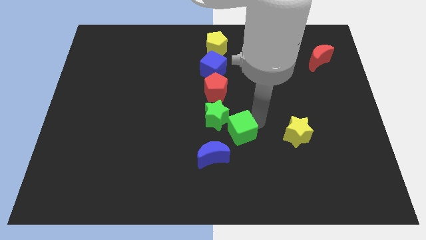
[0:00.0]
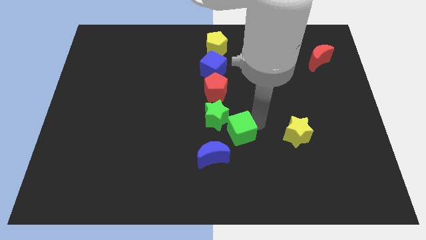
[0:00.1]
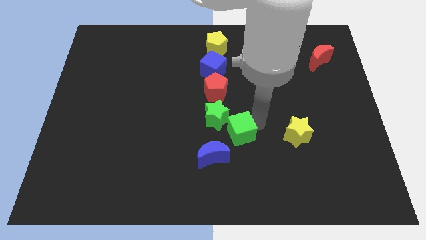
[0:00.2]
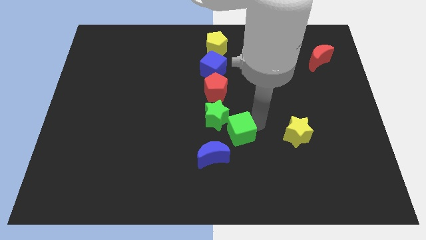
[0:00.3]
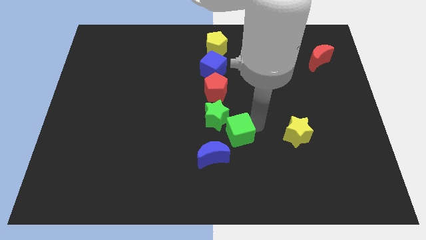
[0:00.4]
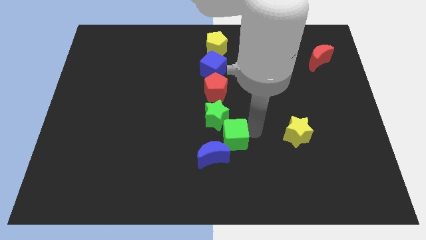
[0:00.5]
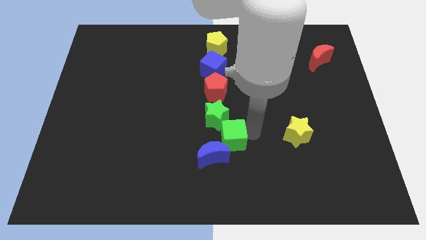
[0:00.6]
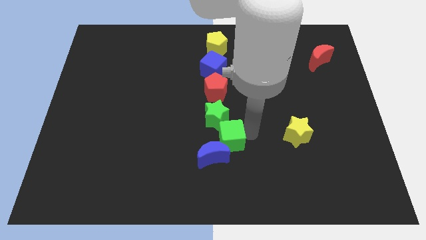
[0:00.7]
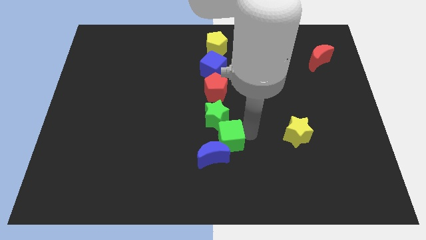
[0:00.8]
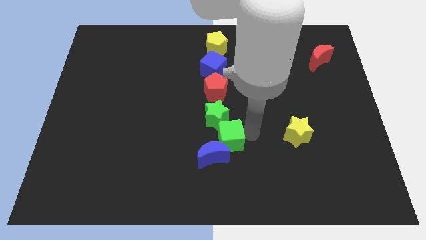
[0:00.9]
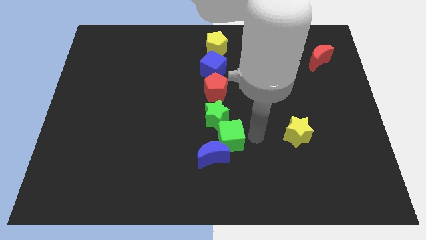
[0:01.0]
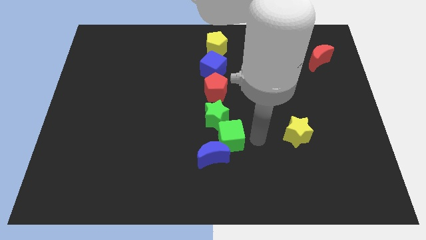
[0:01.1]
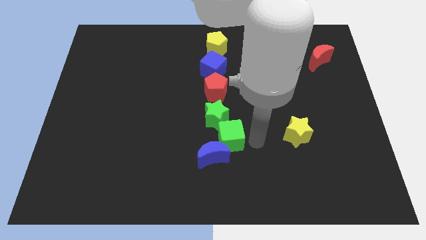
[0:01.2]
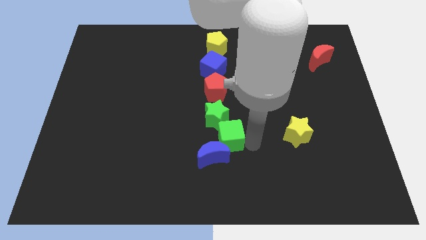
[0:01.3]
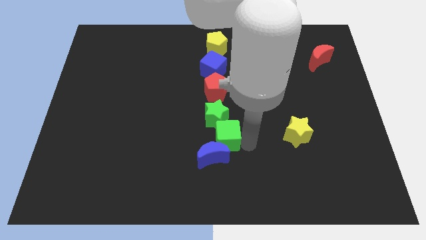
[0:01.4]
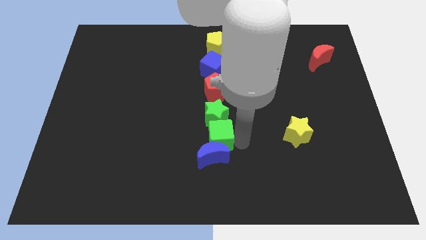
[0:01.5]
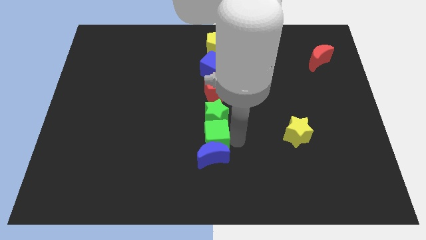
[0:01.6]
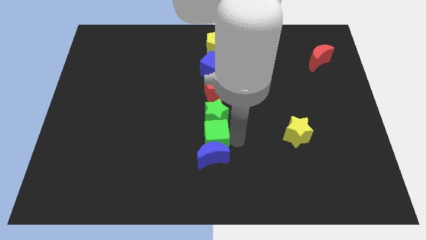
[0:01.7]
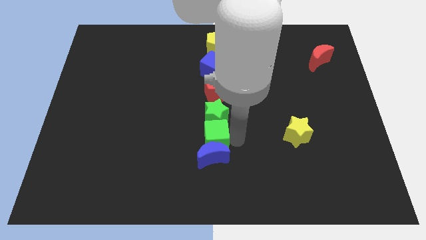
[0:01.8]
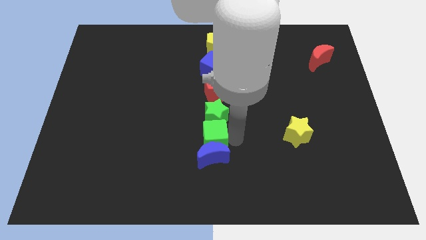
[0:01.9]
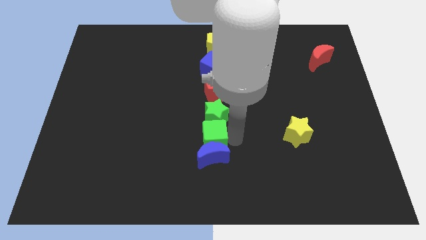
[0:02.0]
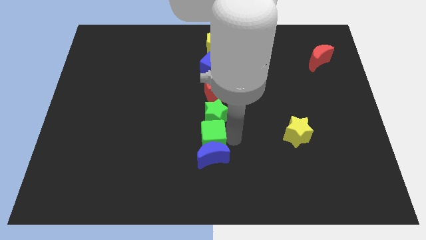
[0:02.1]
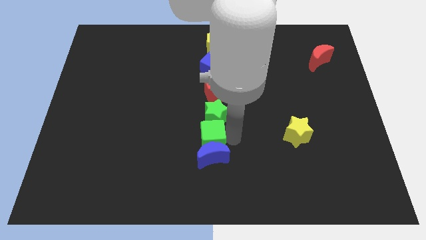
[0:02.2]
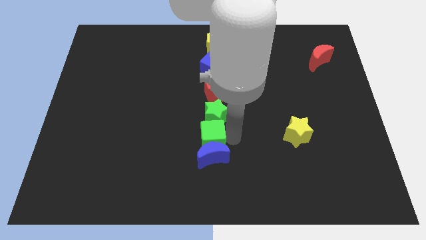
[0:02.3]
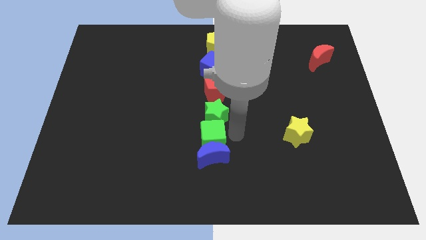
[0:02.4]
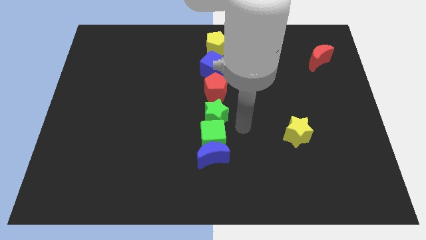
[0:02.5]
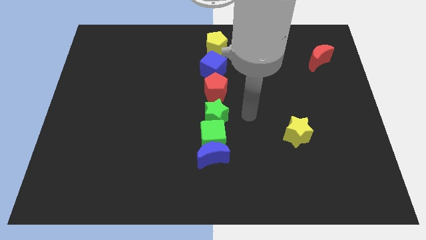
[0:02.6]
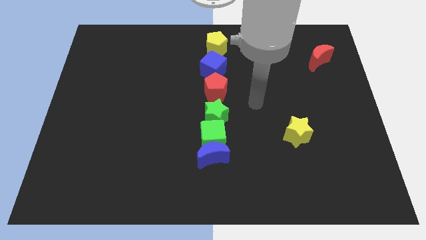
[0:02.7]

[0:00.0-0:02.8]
move the green cube to the bottom of the green star

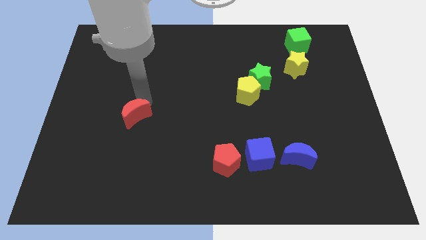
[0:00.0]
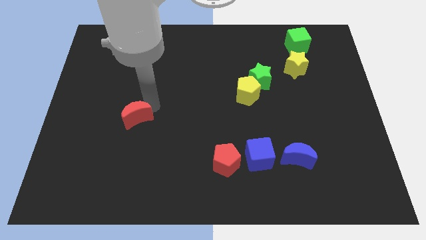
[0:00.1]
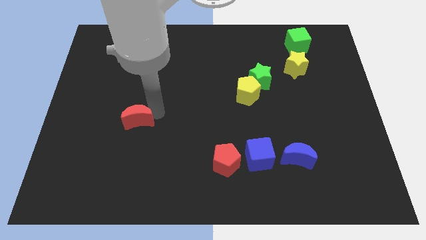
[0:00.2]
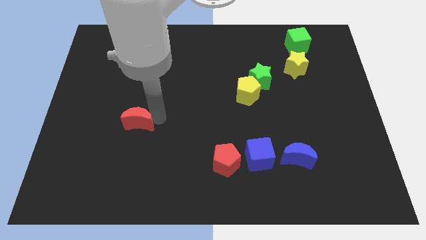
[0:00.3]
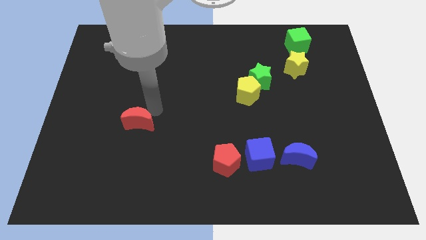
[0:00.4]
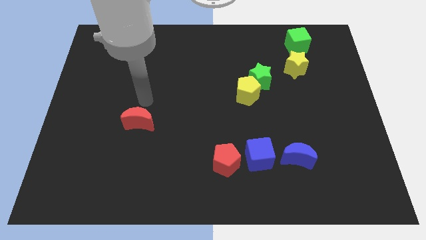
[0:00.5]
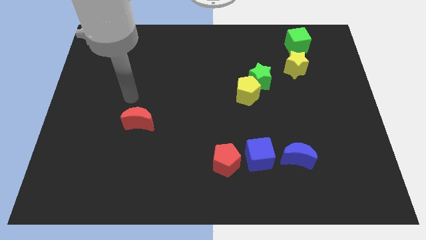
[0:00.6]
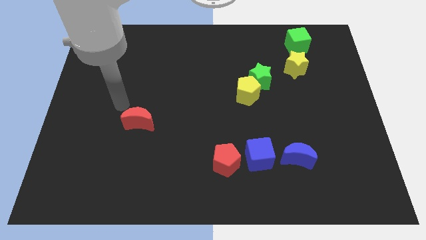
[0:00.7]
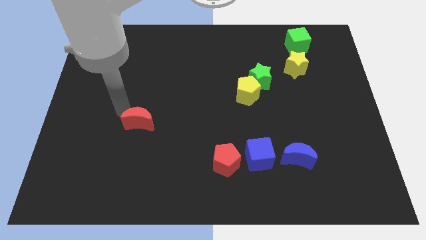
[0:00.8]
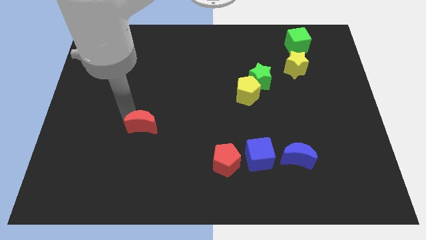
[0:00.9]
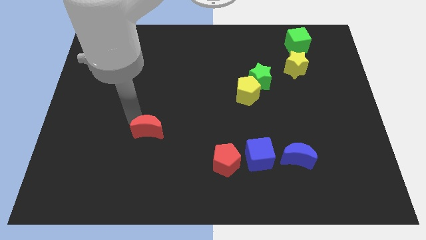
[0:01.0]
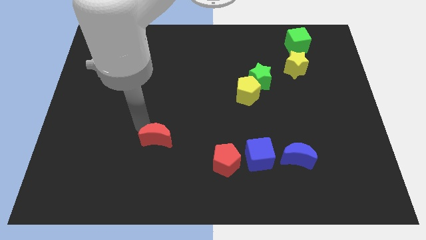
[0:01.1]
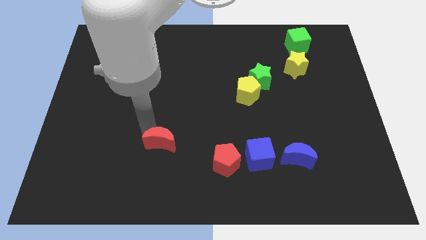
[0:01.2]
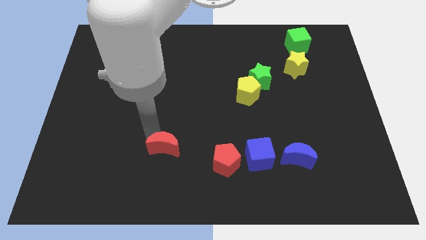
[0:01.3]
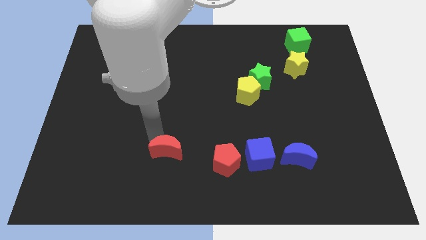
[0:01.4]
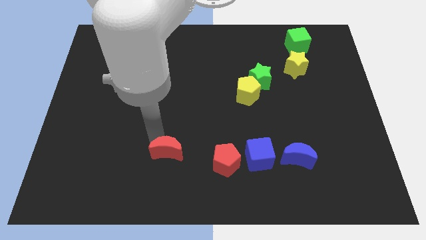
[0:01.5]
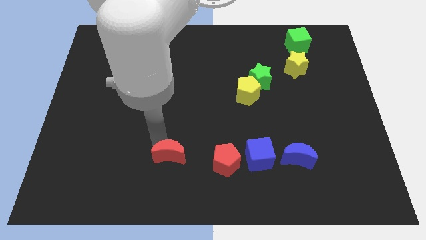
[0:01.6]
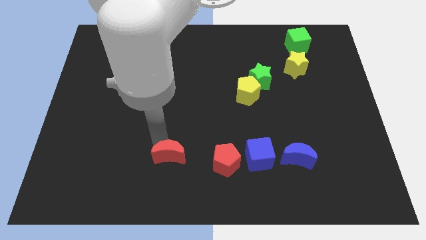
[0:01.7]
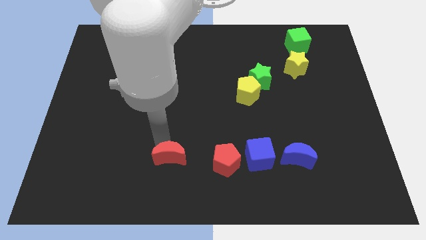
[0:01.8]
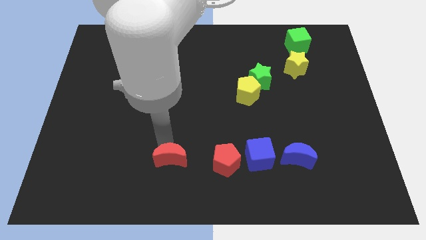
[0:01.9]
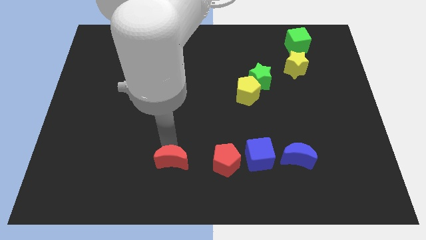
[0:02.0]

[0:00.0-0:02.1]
drag the red moon to the left side of the red pentagon

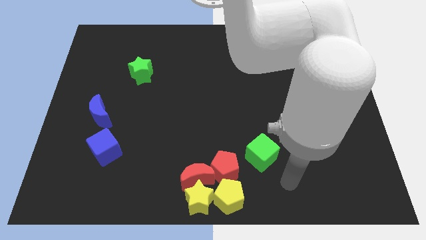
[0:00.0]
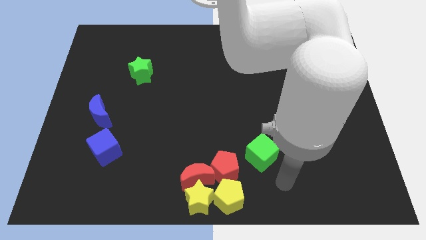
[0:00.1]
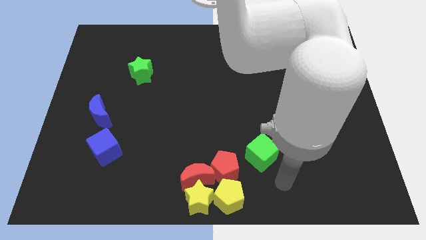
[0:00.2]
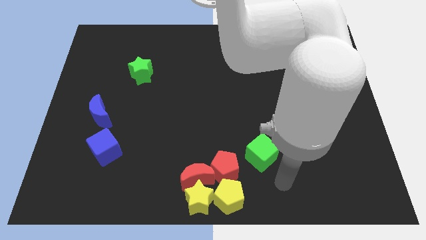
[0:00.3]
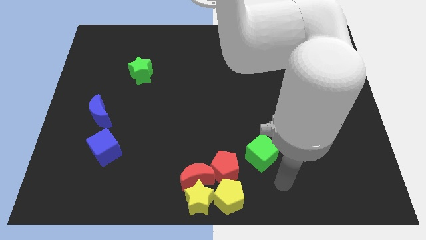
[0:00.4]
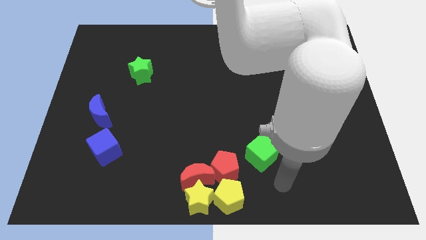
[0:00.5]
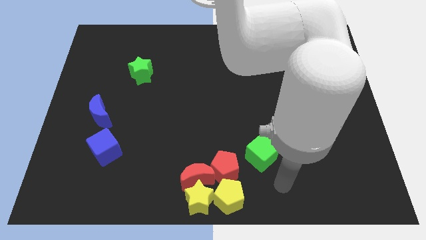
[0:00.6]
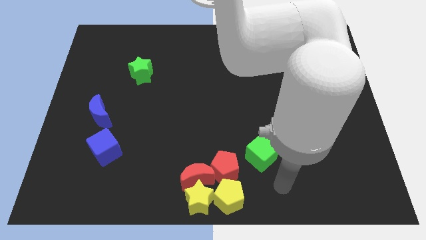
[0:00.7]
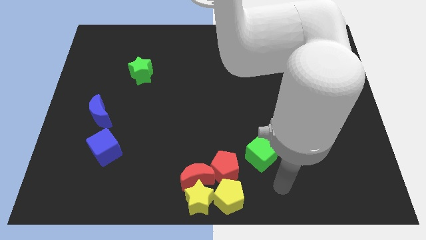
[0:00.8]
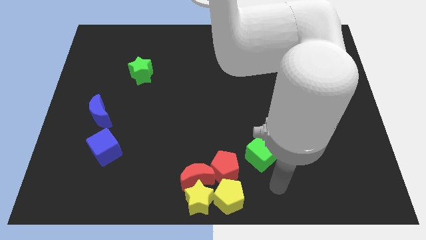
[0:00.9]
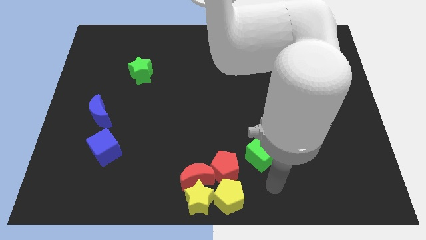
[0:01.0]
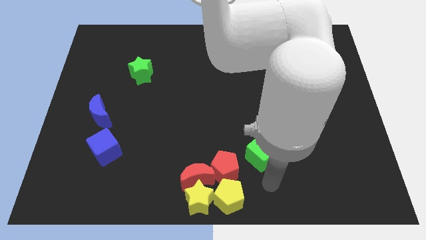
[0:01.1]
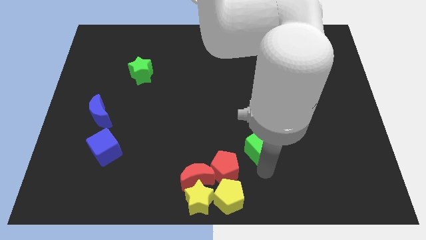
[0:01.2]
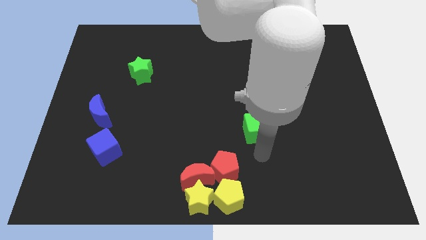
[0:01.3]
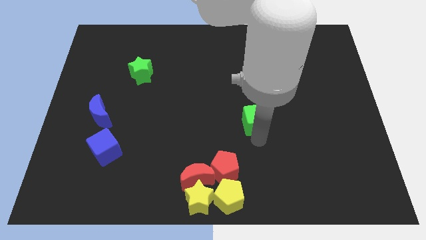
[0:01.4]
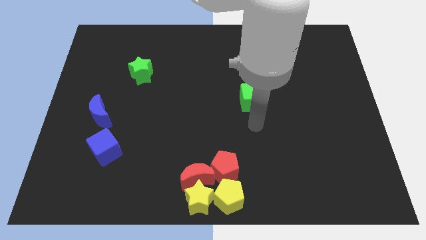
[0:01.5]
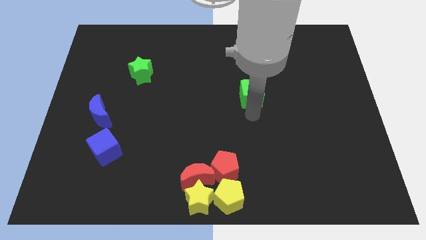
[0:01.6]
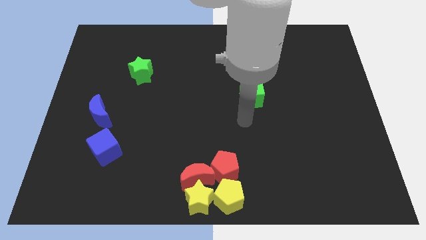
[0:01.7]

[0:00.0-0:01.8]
slide the green cube towards the top side of the board

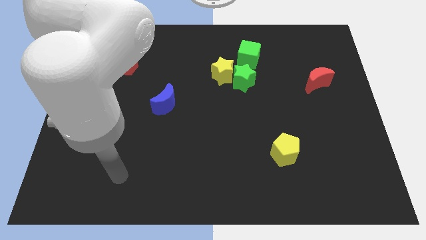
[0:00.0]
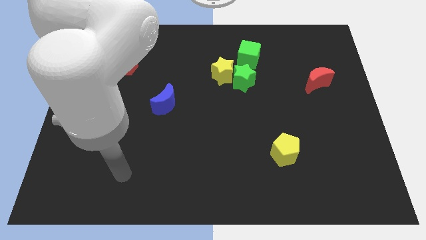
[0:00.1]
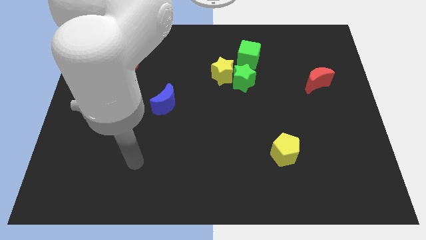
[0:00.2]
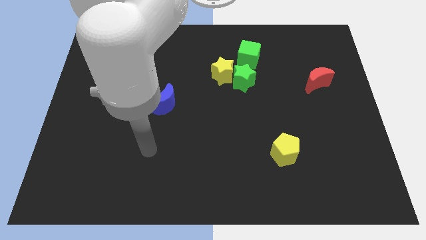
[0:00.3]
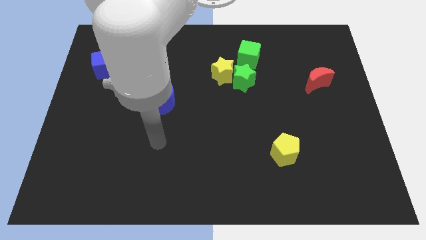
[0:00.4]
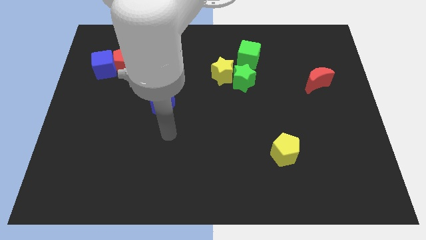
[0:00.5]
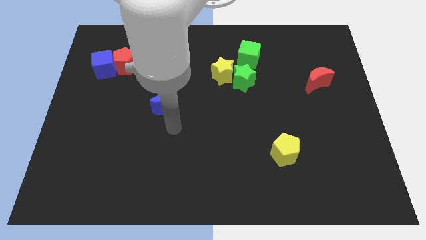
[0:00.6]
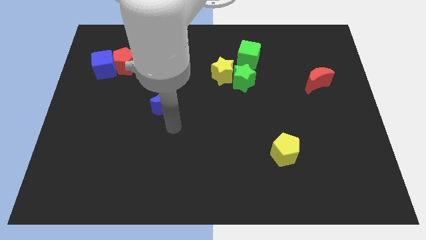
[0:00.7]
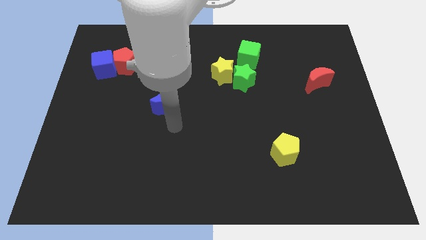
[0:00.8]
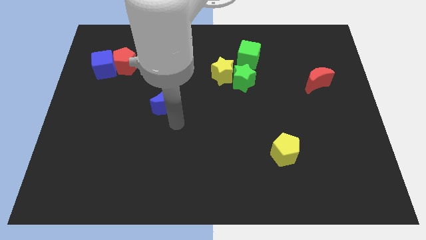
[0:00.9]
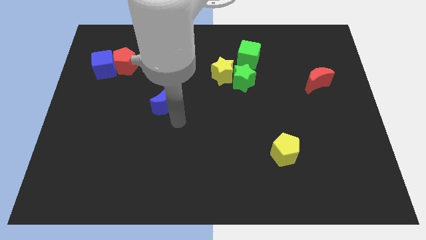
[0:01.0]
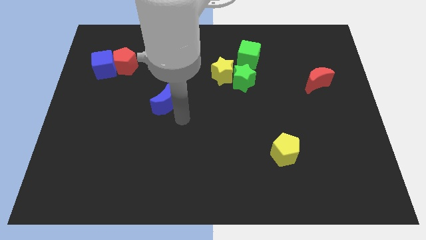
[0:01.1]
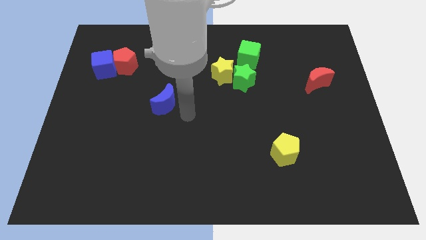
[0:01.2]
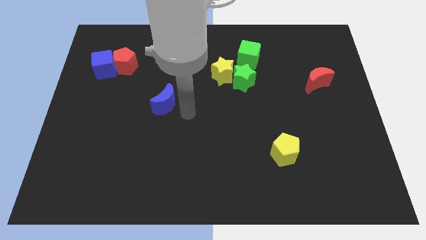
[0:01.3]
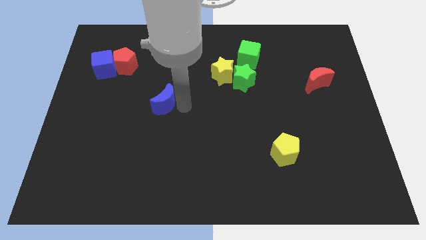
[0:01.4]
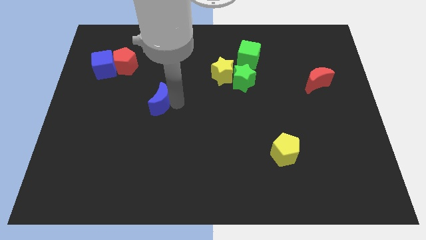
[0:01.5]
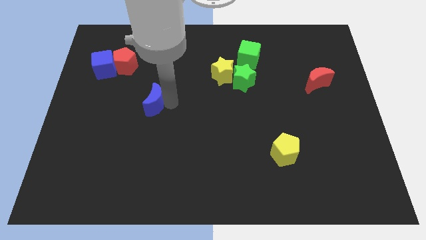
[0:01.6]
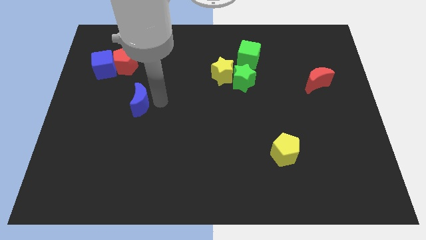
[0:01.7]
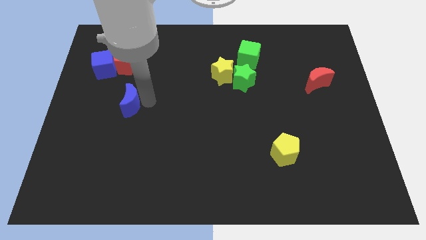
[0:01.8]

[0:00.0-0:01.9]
move the blue crescent to the center left

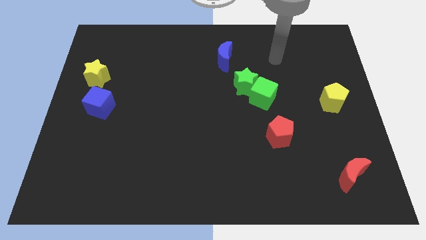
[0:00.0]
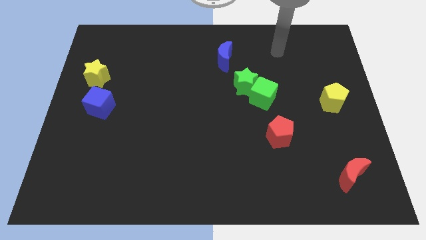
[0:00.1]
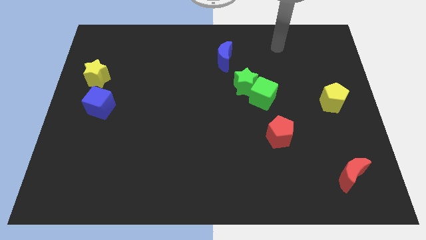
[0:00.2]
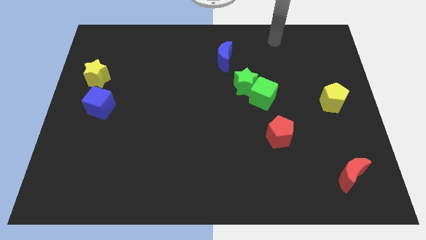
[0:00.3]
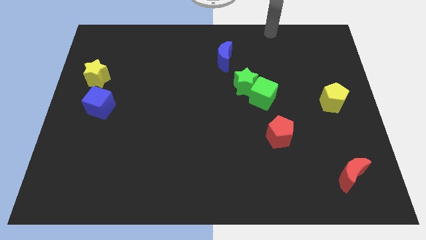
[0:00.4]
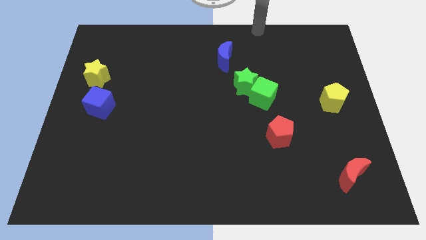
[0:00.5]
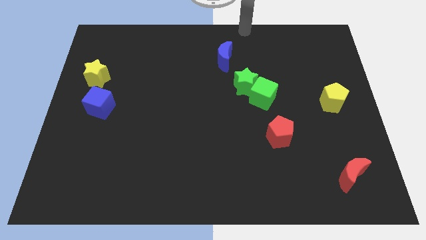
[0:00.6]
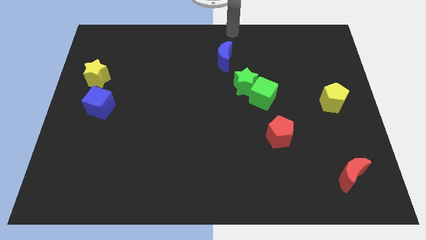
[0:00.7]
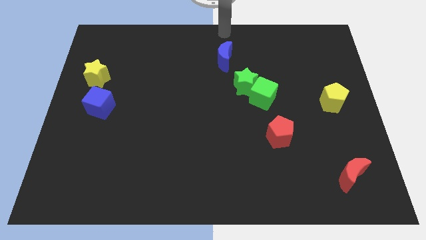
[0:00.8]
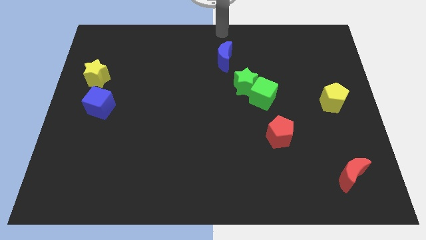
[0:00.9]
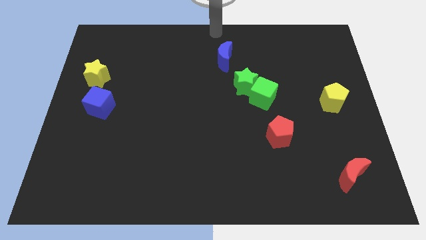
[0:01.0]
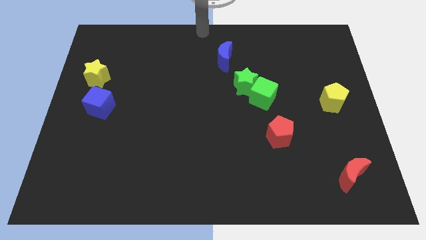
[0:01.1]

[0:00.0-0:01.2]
put your hand at the top center
